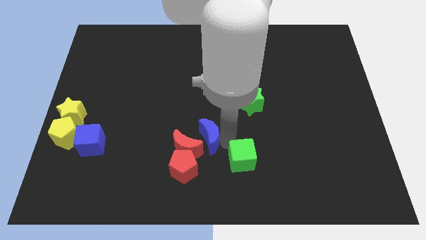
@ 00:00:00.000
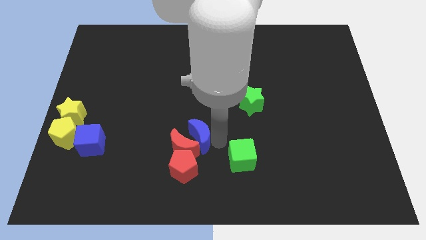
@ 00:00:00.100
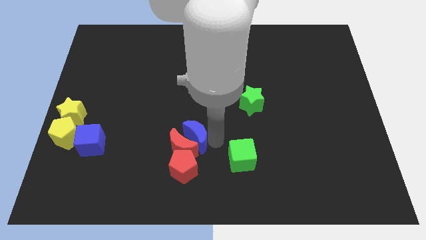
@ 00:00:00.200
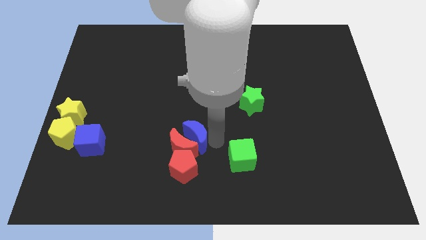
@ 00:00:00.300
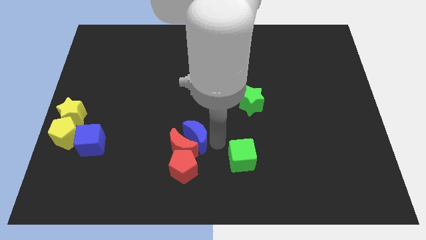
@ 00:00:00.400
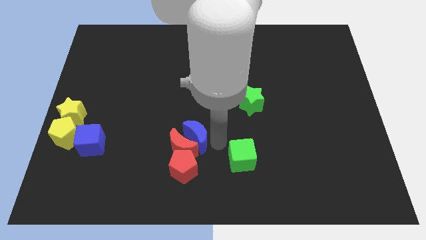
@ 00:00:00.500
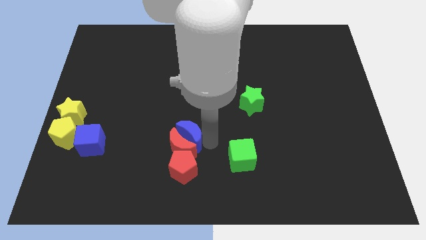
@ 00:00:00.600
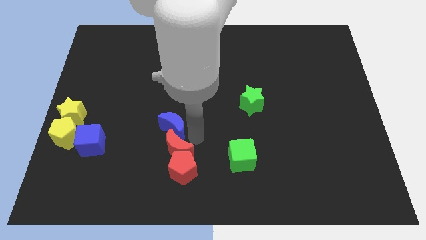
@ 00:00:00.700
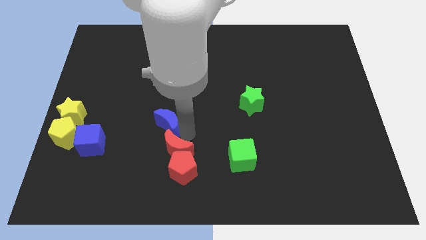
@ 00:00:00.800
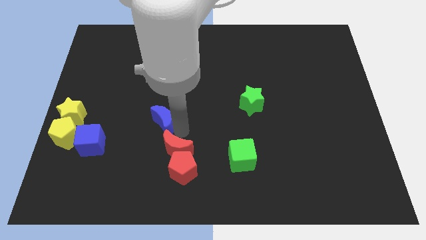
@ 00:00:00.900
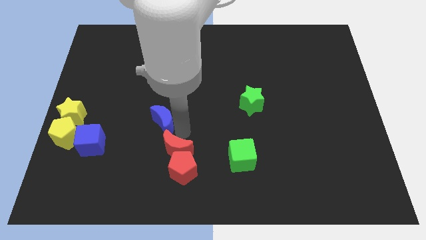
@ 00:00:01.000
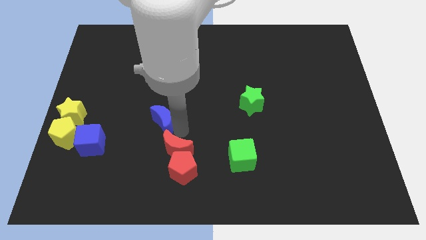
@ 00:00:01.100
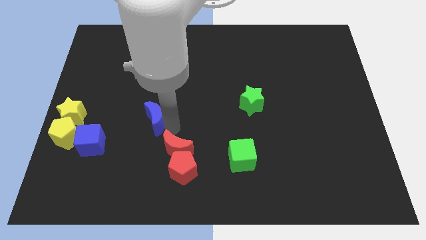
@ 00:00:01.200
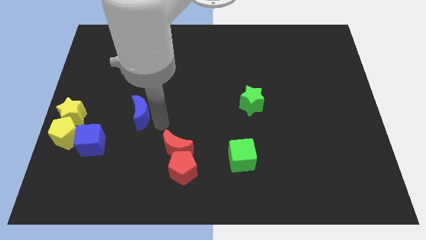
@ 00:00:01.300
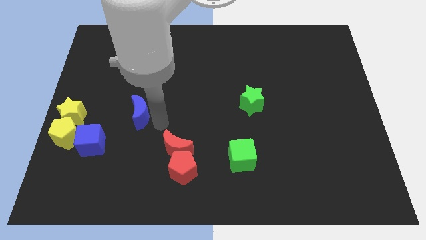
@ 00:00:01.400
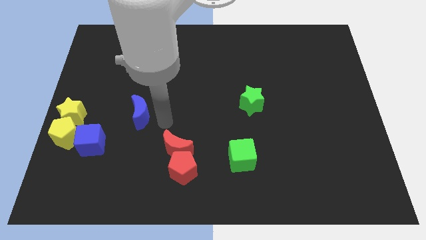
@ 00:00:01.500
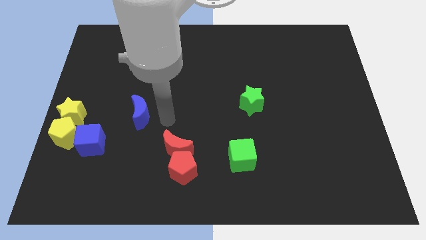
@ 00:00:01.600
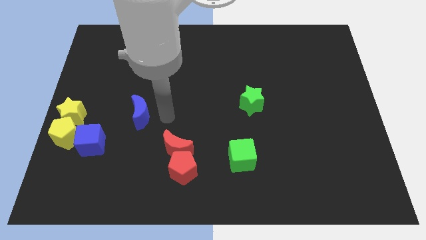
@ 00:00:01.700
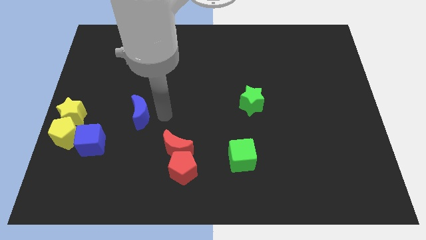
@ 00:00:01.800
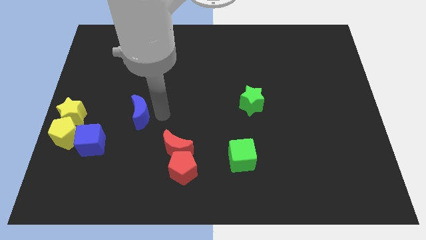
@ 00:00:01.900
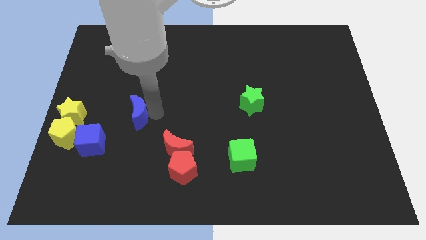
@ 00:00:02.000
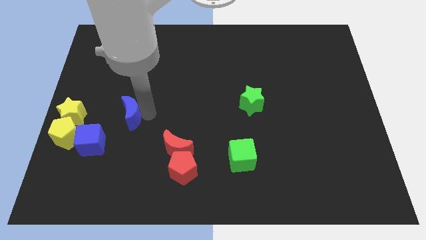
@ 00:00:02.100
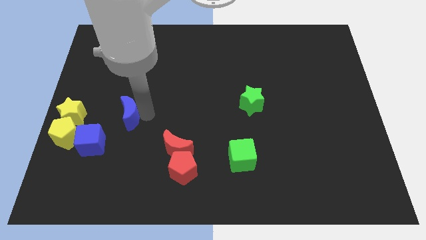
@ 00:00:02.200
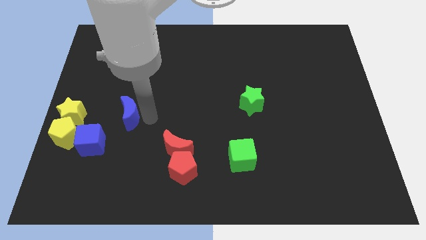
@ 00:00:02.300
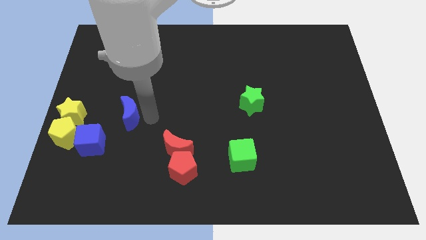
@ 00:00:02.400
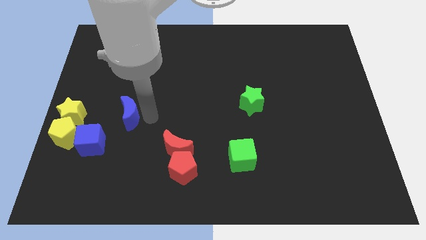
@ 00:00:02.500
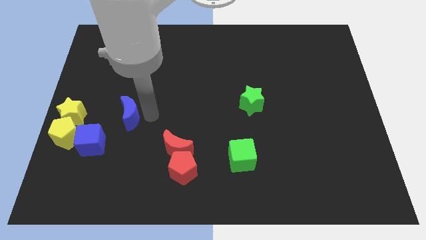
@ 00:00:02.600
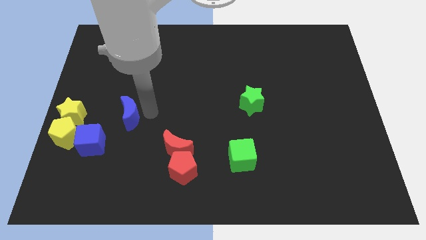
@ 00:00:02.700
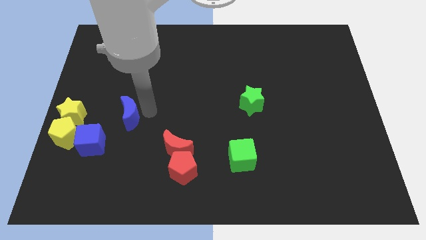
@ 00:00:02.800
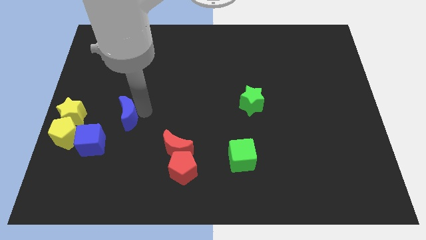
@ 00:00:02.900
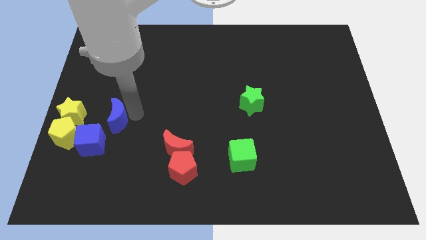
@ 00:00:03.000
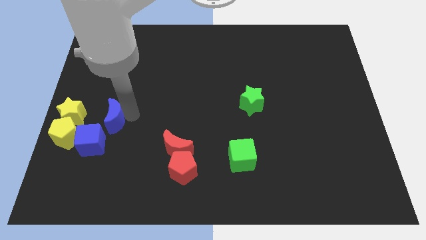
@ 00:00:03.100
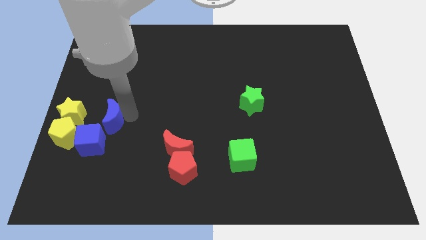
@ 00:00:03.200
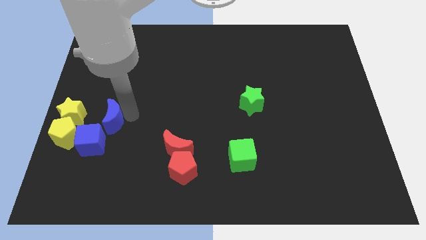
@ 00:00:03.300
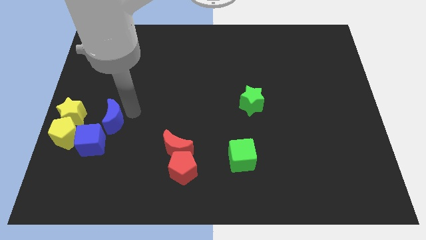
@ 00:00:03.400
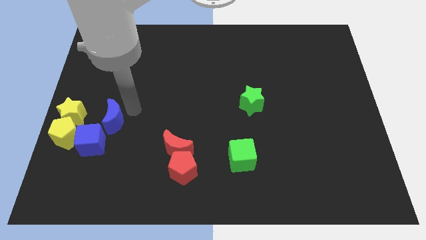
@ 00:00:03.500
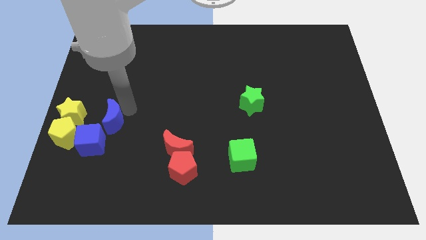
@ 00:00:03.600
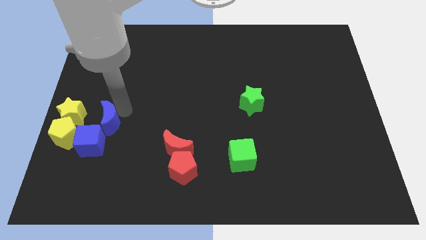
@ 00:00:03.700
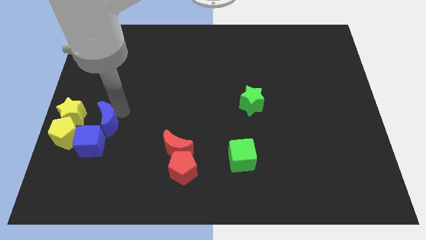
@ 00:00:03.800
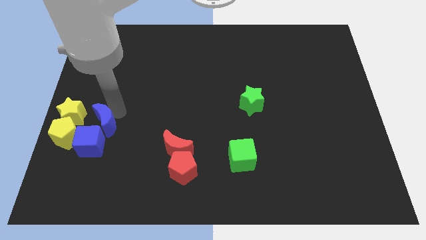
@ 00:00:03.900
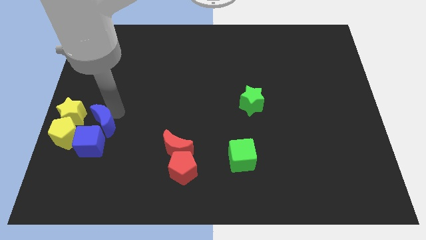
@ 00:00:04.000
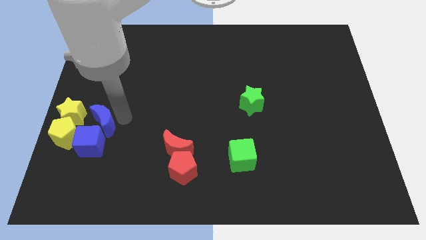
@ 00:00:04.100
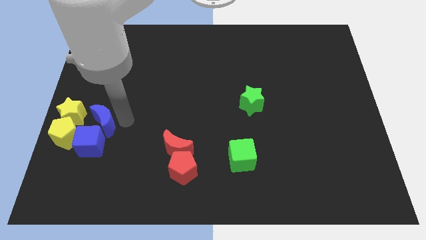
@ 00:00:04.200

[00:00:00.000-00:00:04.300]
push the blue crescent to the top of the blue cube

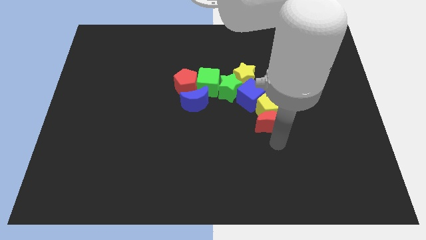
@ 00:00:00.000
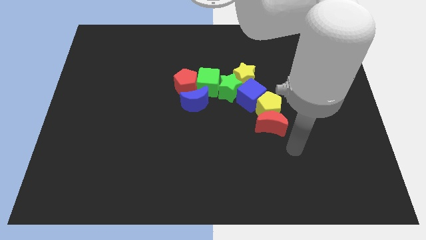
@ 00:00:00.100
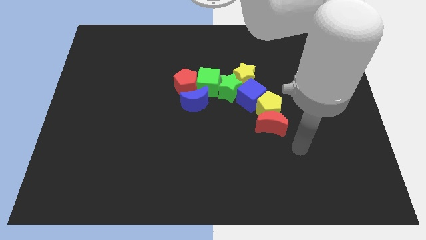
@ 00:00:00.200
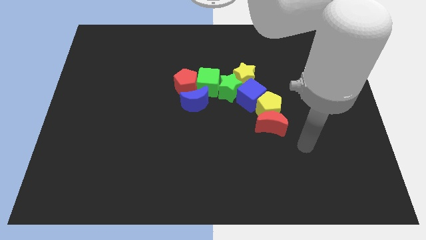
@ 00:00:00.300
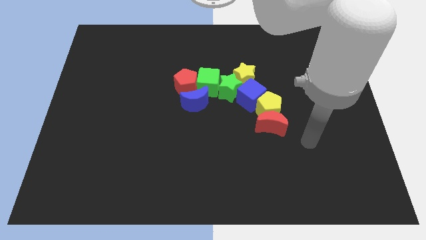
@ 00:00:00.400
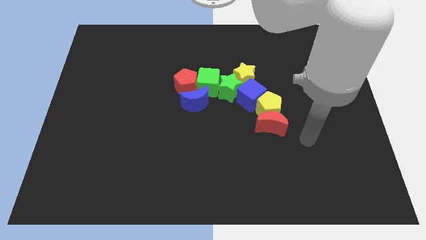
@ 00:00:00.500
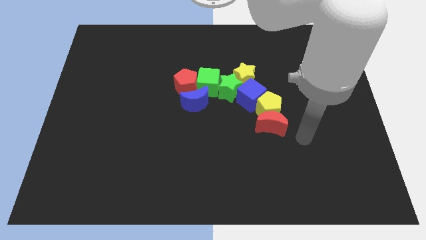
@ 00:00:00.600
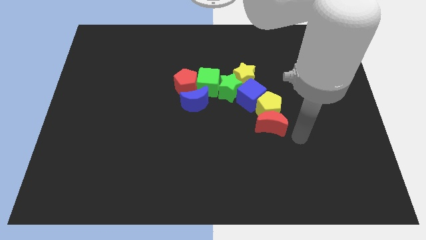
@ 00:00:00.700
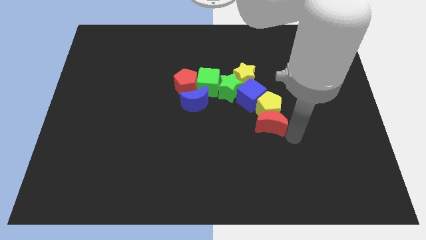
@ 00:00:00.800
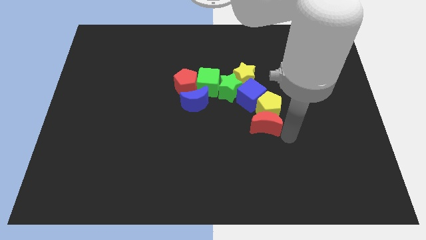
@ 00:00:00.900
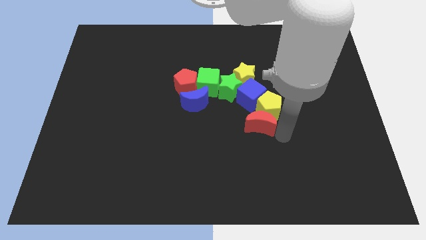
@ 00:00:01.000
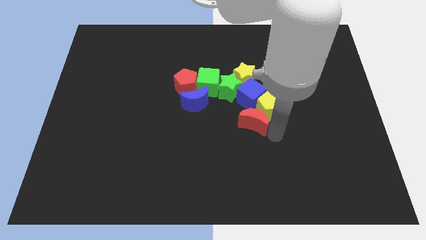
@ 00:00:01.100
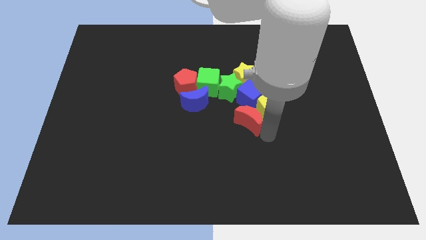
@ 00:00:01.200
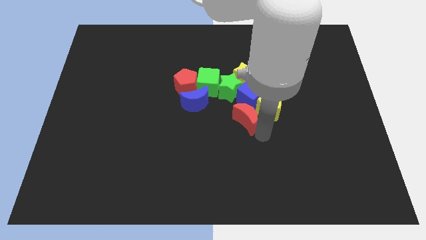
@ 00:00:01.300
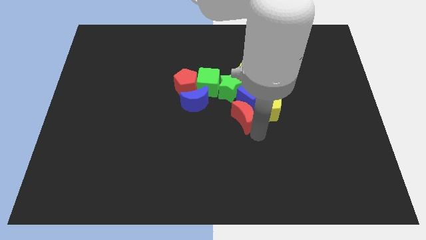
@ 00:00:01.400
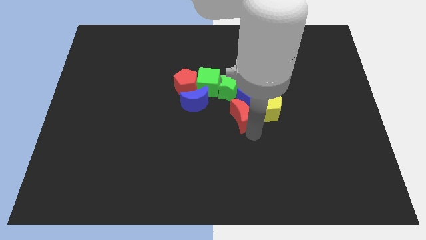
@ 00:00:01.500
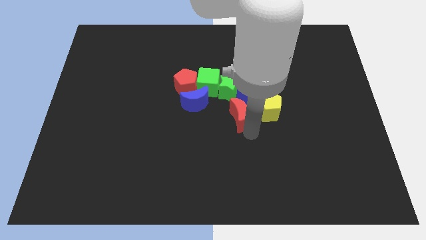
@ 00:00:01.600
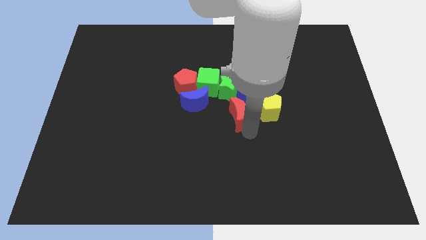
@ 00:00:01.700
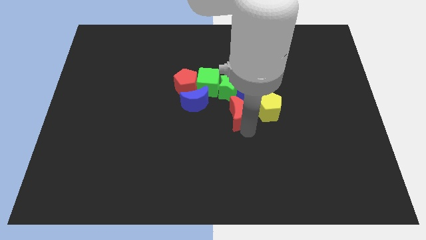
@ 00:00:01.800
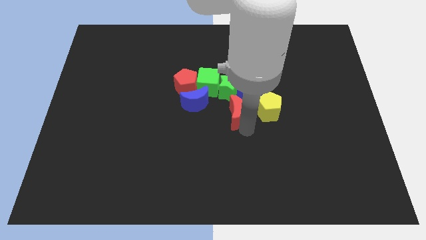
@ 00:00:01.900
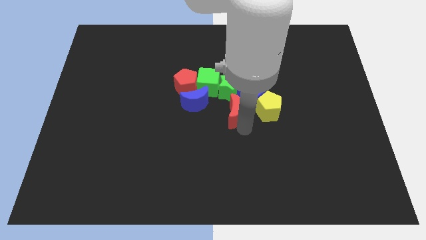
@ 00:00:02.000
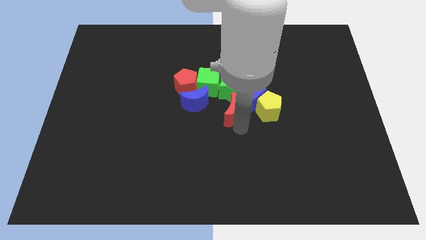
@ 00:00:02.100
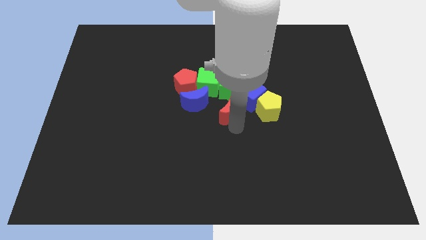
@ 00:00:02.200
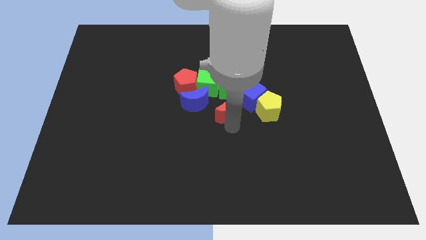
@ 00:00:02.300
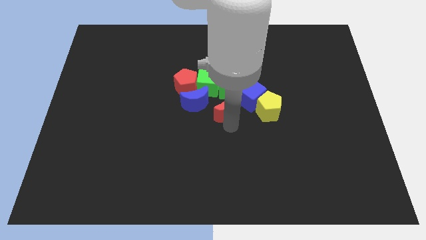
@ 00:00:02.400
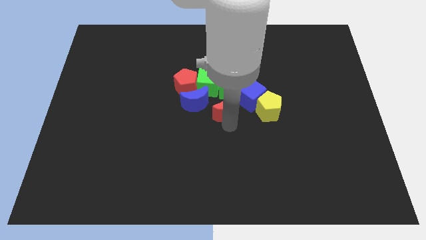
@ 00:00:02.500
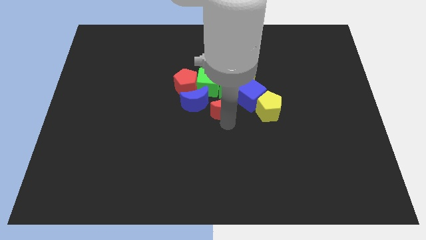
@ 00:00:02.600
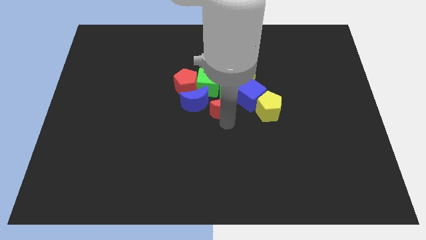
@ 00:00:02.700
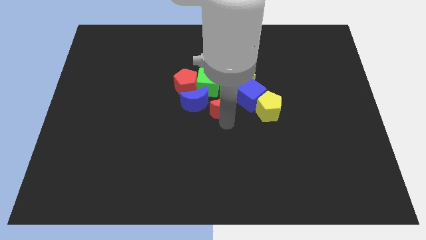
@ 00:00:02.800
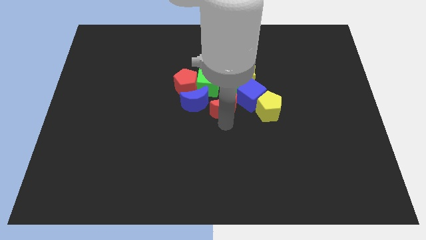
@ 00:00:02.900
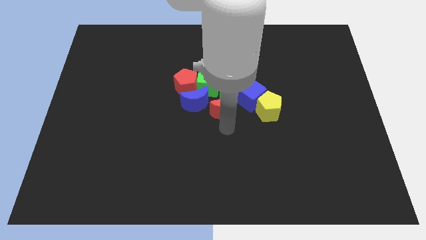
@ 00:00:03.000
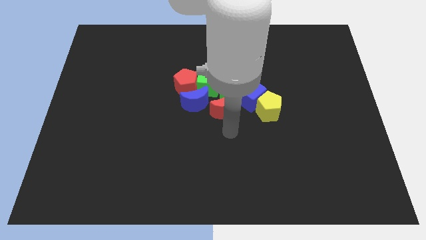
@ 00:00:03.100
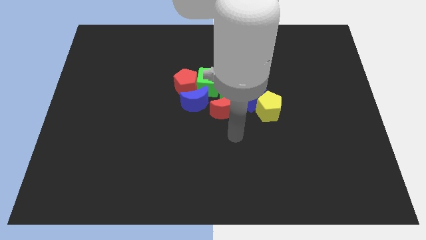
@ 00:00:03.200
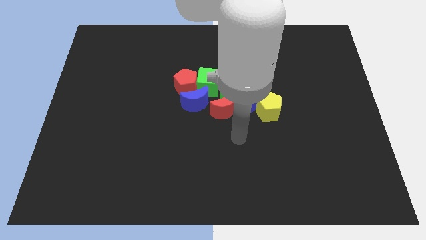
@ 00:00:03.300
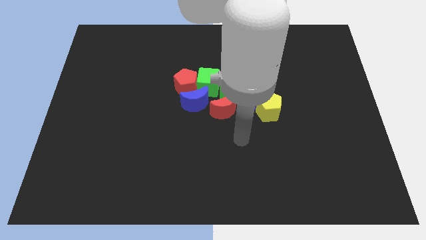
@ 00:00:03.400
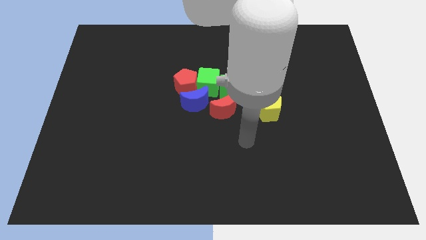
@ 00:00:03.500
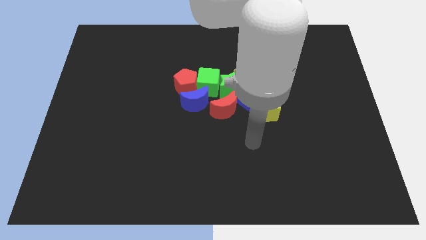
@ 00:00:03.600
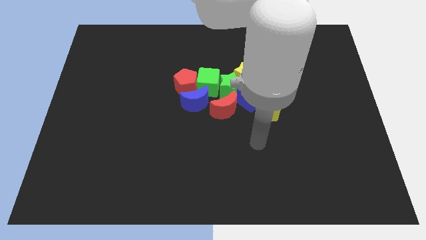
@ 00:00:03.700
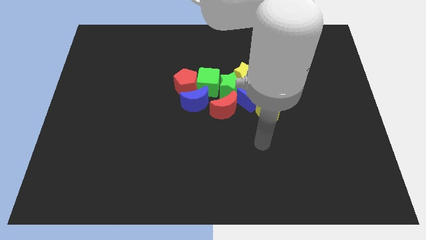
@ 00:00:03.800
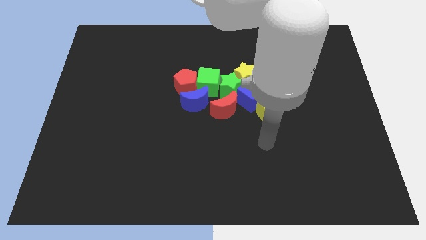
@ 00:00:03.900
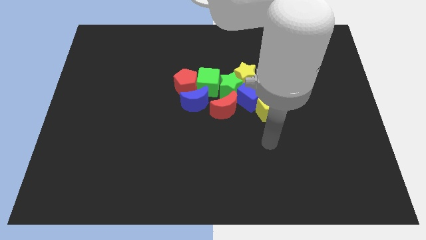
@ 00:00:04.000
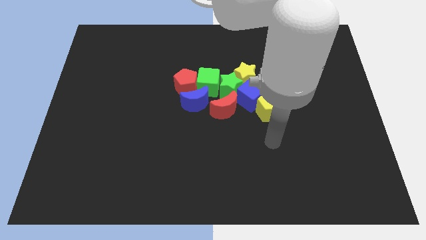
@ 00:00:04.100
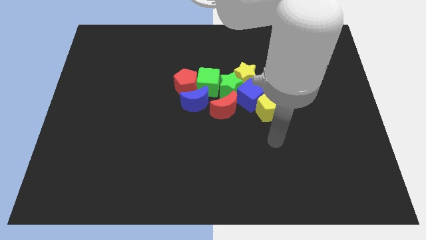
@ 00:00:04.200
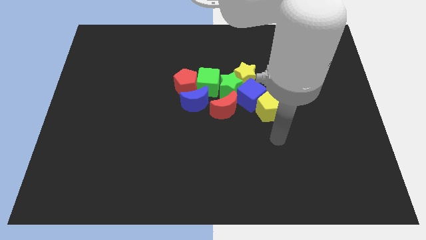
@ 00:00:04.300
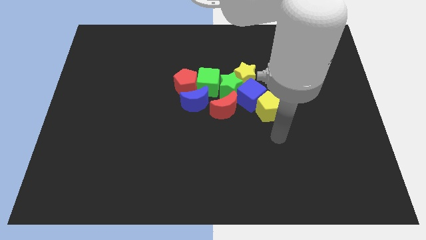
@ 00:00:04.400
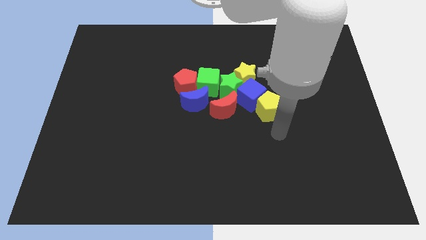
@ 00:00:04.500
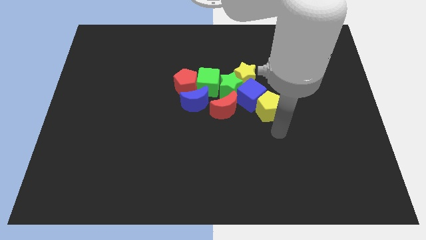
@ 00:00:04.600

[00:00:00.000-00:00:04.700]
place the red crescent below the green star
